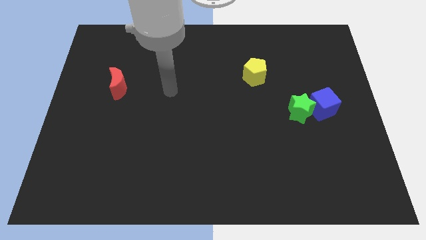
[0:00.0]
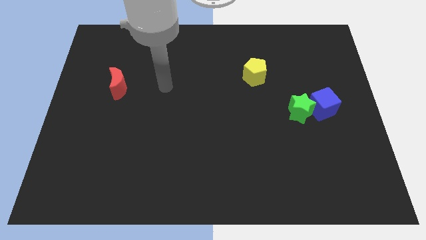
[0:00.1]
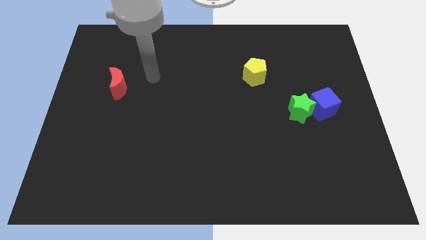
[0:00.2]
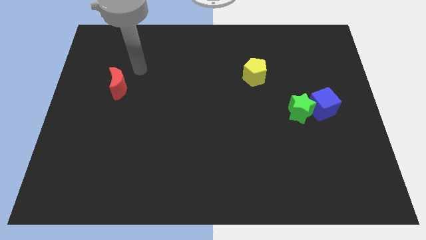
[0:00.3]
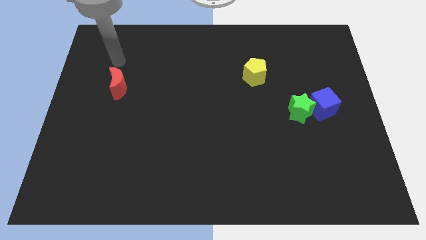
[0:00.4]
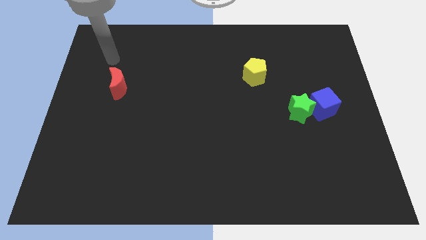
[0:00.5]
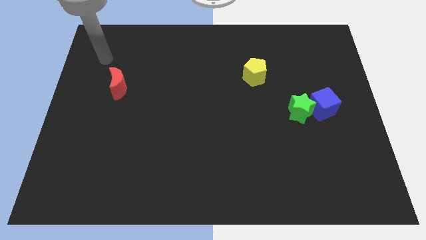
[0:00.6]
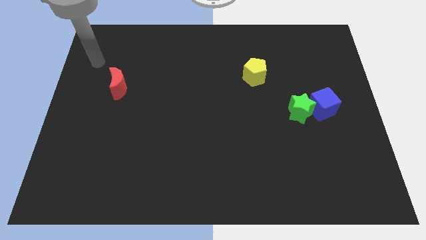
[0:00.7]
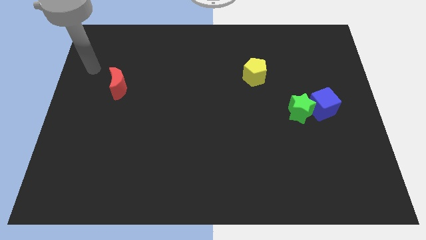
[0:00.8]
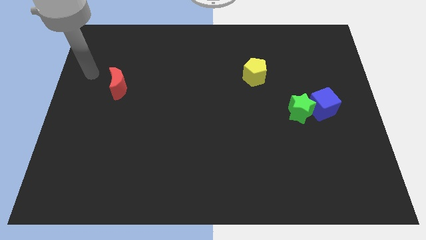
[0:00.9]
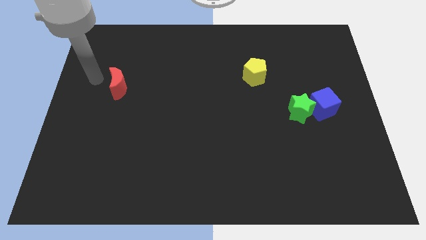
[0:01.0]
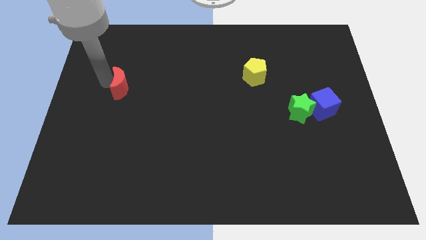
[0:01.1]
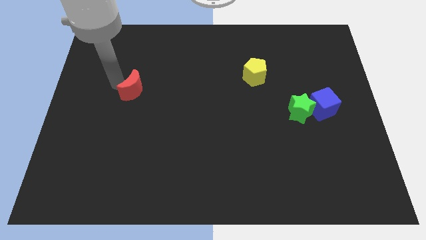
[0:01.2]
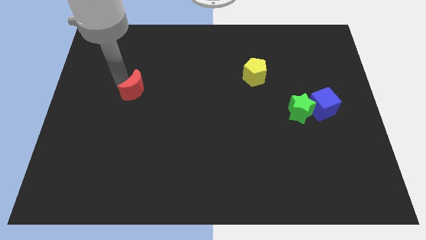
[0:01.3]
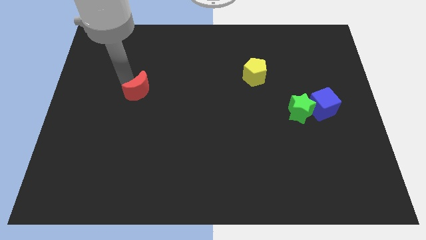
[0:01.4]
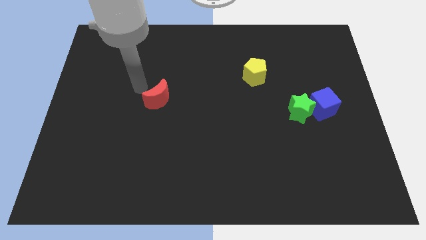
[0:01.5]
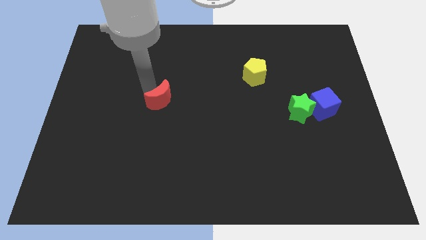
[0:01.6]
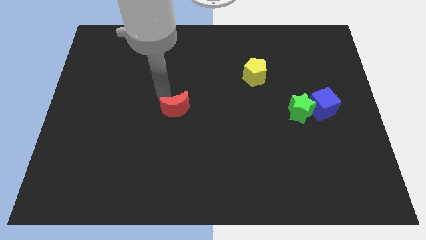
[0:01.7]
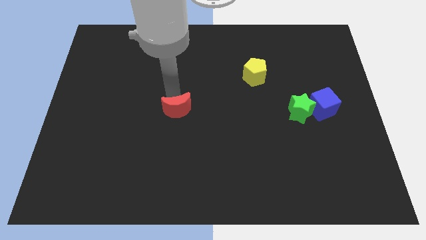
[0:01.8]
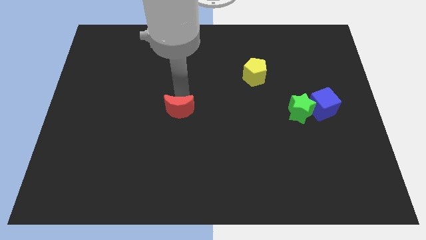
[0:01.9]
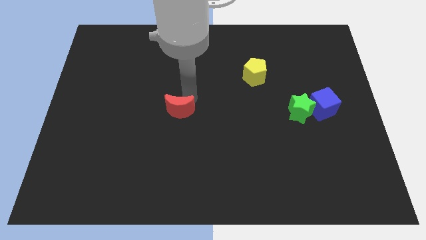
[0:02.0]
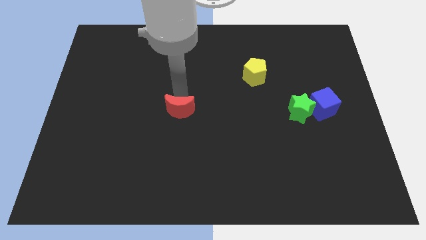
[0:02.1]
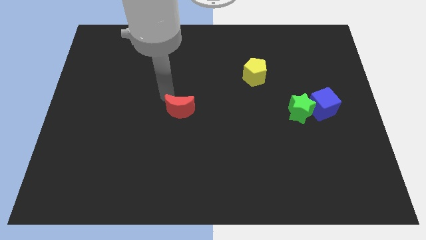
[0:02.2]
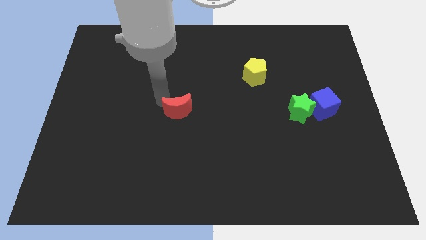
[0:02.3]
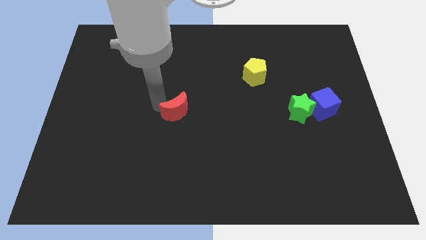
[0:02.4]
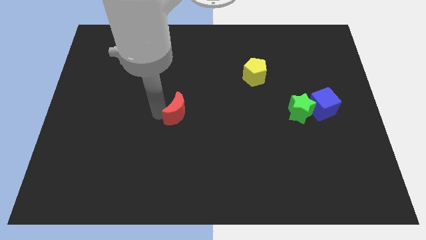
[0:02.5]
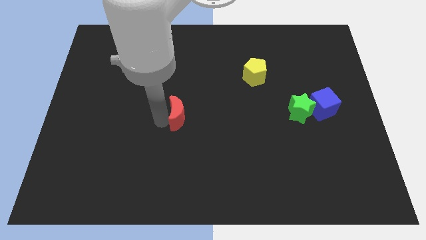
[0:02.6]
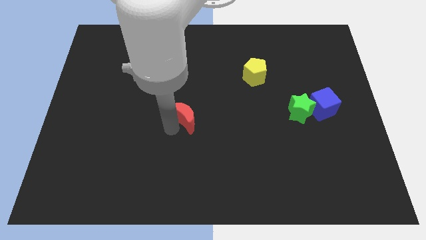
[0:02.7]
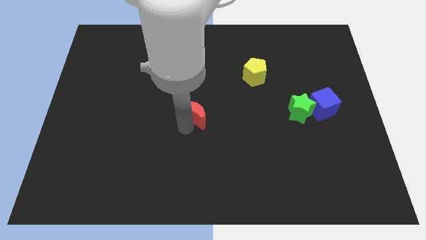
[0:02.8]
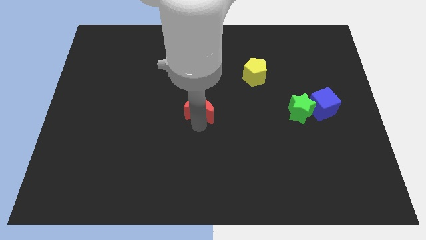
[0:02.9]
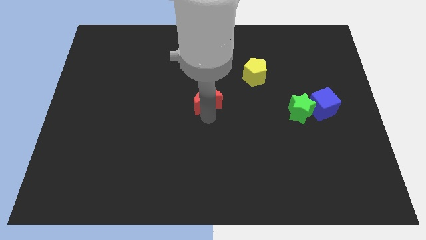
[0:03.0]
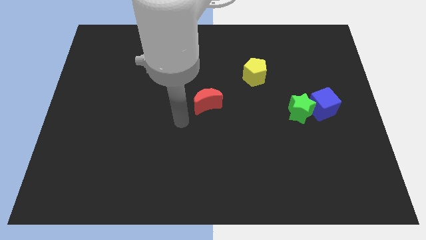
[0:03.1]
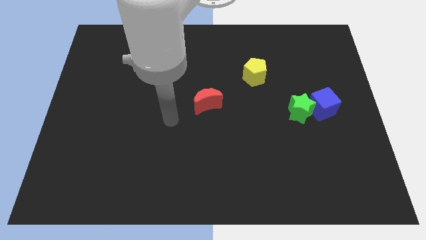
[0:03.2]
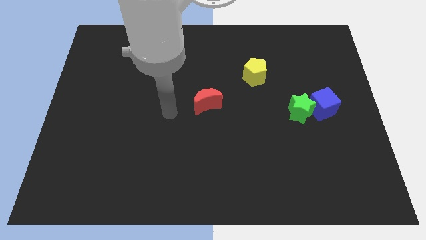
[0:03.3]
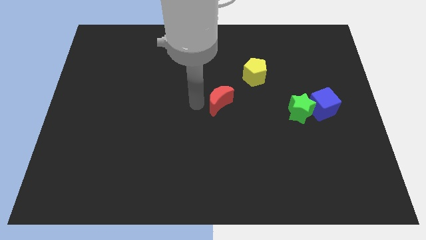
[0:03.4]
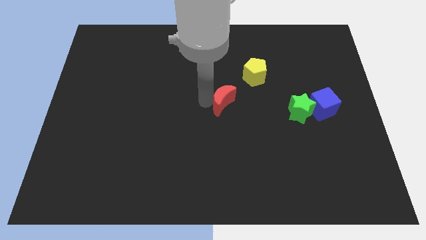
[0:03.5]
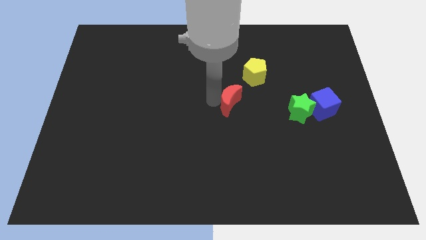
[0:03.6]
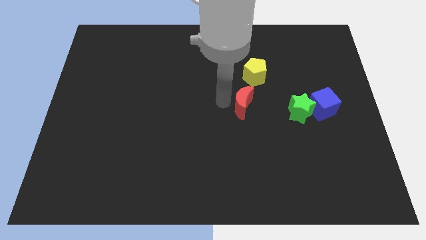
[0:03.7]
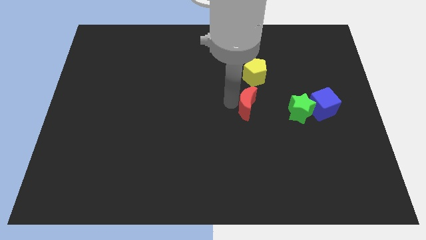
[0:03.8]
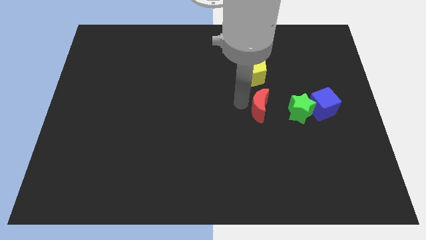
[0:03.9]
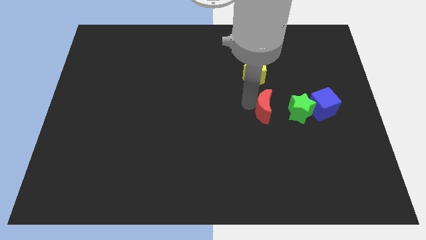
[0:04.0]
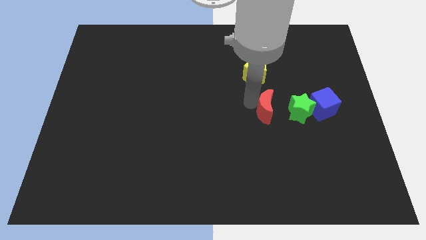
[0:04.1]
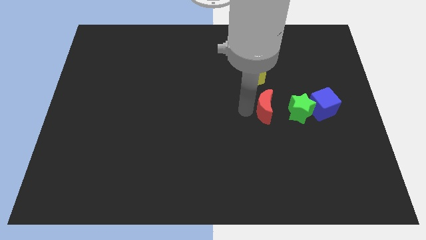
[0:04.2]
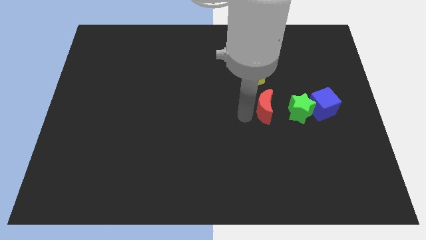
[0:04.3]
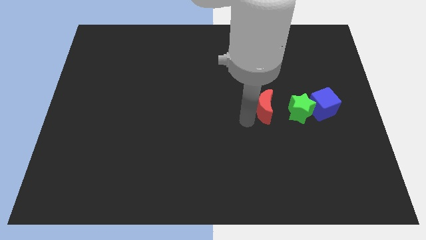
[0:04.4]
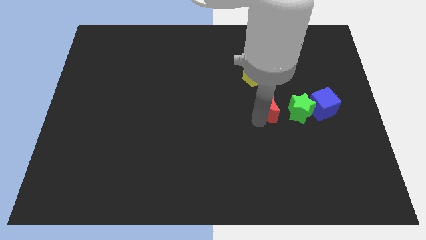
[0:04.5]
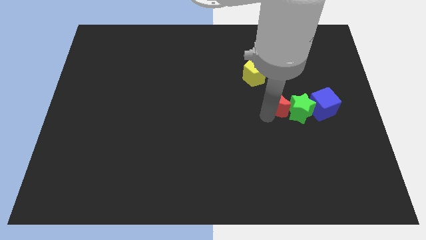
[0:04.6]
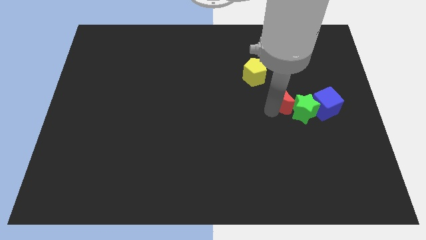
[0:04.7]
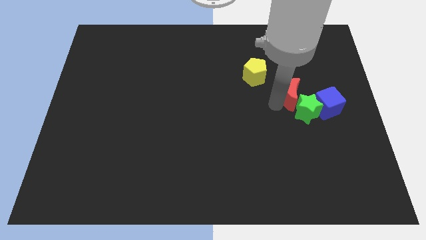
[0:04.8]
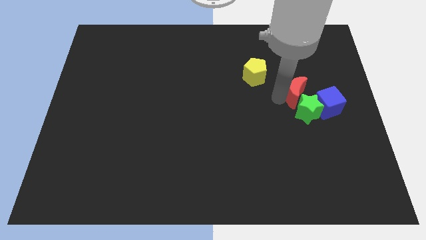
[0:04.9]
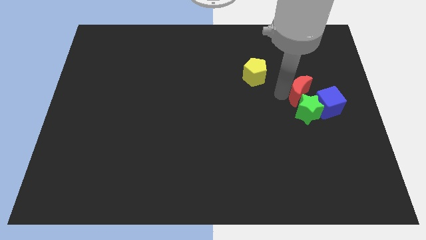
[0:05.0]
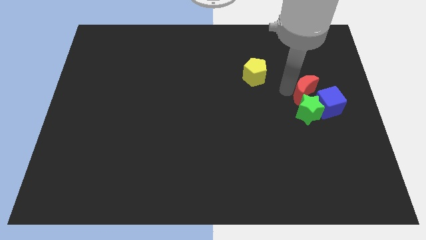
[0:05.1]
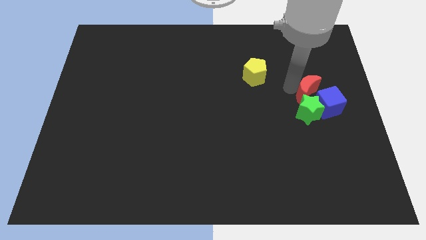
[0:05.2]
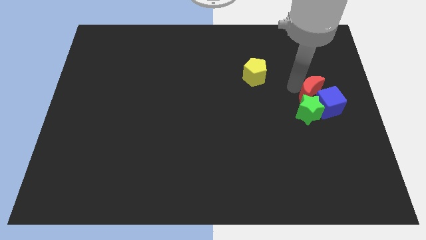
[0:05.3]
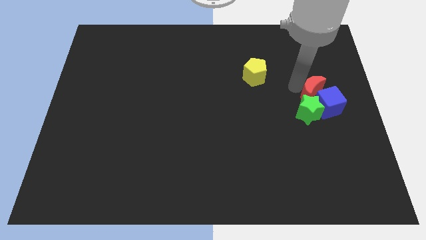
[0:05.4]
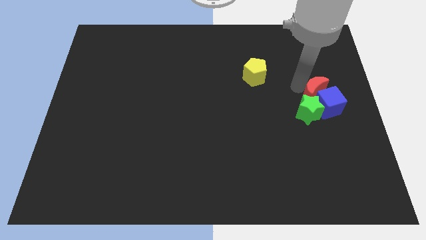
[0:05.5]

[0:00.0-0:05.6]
move the red block next to the cube

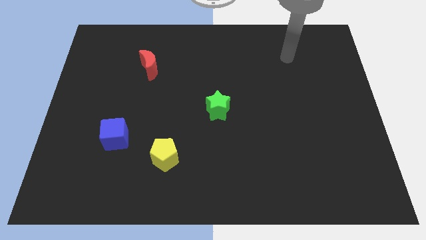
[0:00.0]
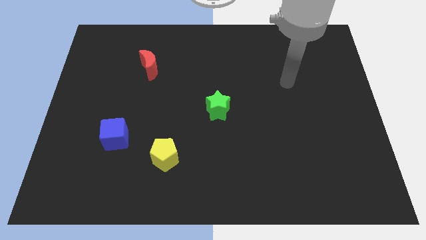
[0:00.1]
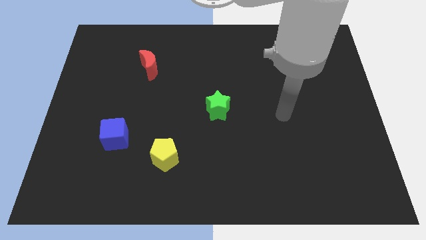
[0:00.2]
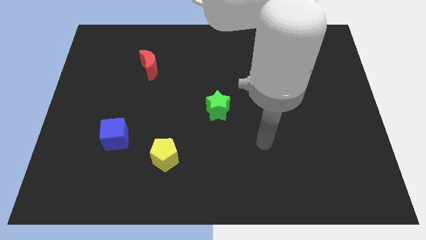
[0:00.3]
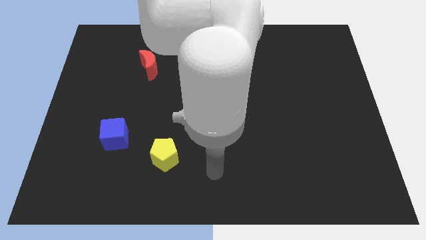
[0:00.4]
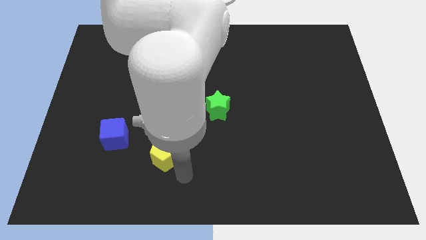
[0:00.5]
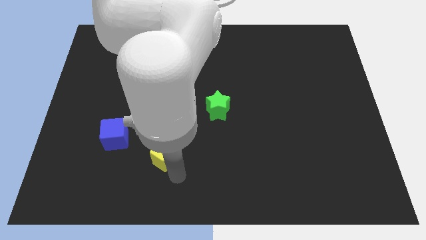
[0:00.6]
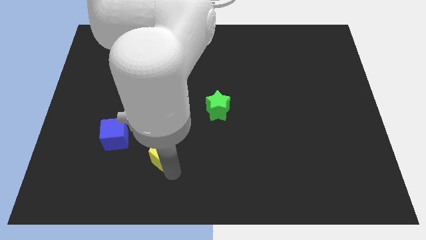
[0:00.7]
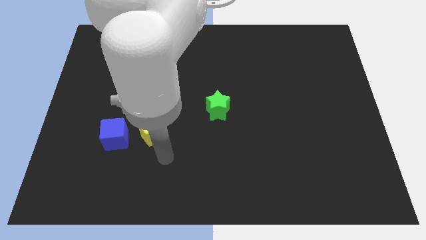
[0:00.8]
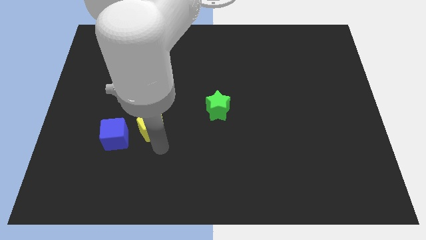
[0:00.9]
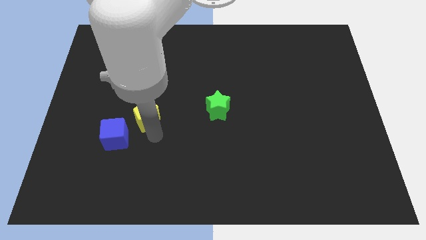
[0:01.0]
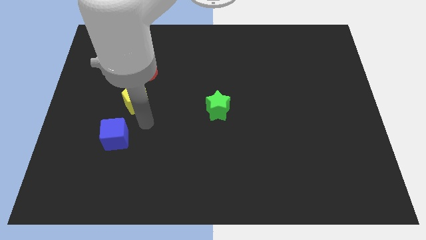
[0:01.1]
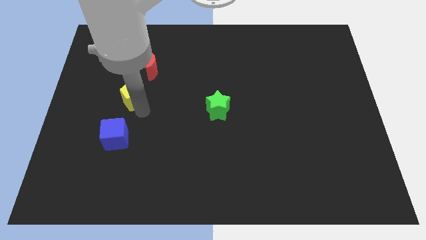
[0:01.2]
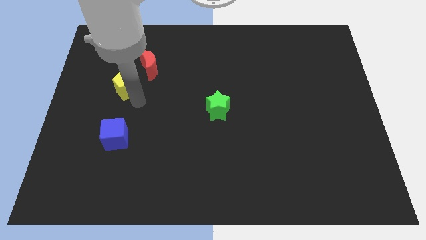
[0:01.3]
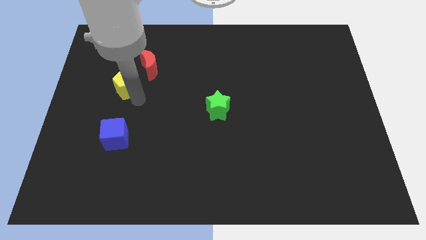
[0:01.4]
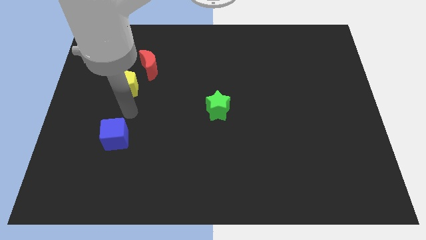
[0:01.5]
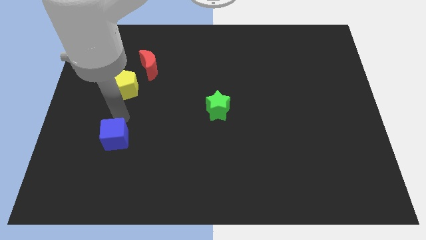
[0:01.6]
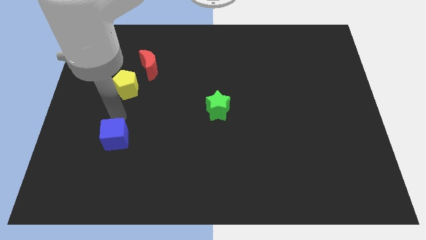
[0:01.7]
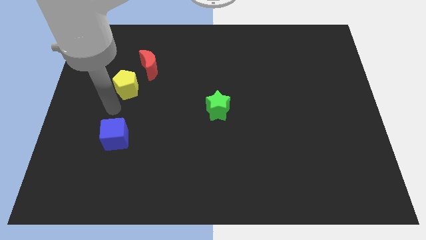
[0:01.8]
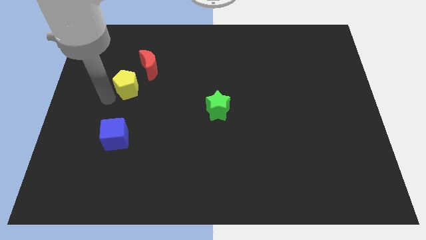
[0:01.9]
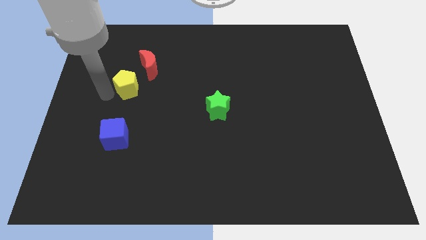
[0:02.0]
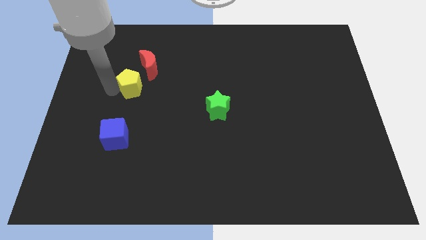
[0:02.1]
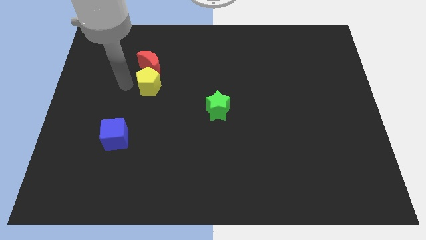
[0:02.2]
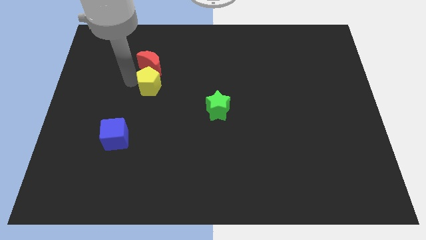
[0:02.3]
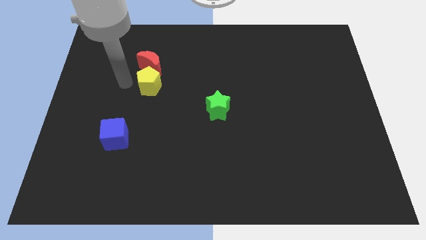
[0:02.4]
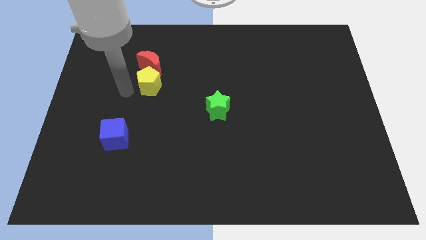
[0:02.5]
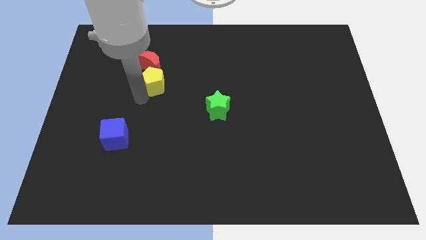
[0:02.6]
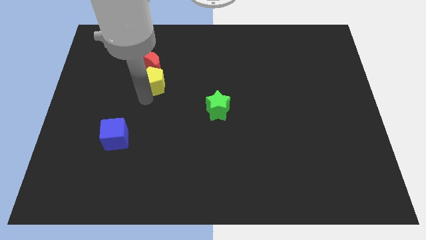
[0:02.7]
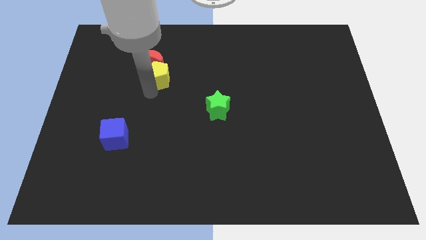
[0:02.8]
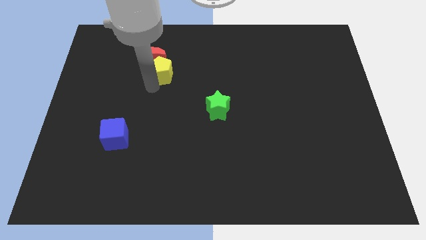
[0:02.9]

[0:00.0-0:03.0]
slide the yellow pentagon towards the red block
